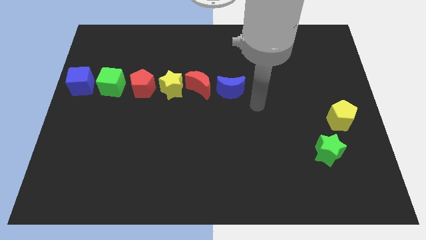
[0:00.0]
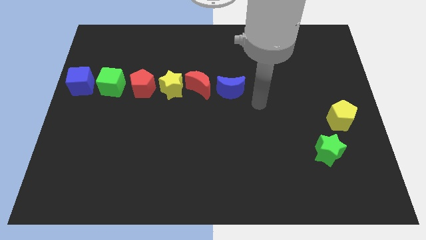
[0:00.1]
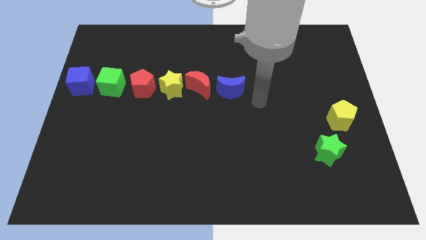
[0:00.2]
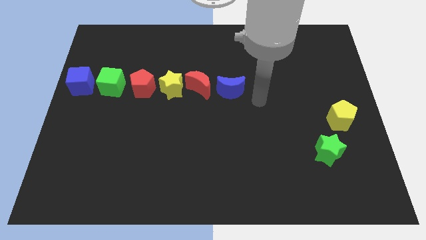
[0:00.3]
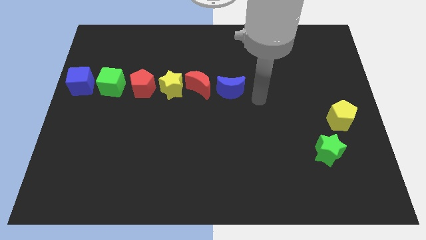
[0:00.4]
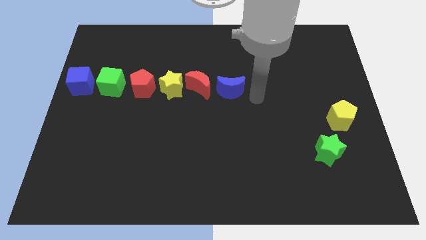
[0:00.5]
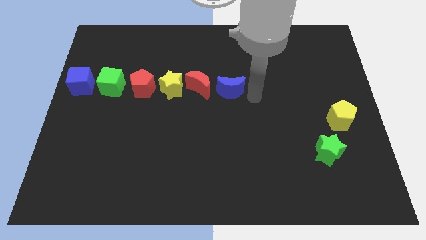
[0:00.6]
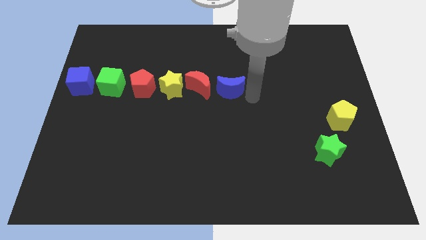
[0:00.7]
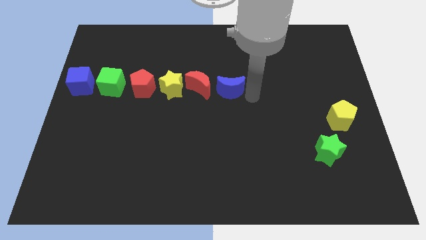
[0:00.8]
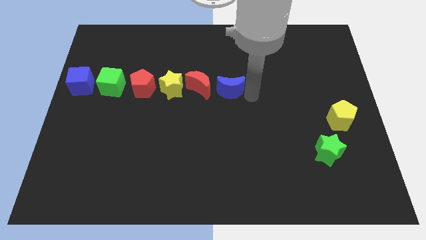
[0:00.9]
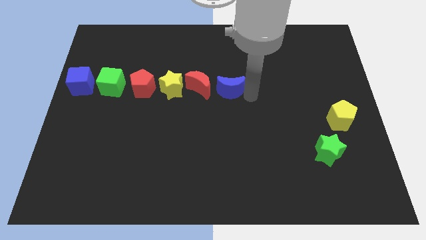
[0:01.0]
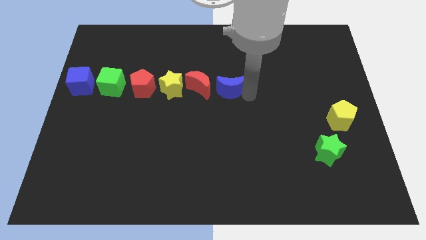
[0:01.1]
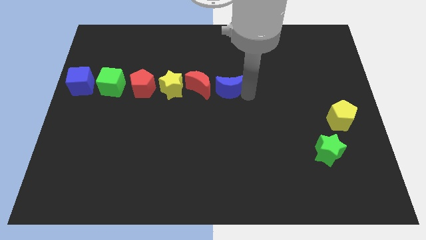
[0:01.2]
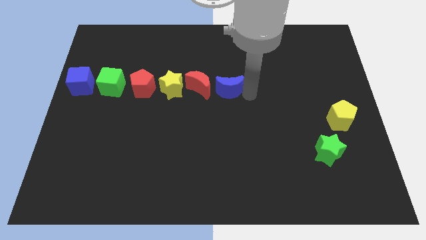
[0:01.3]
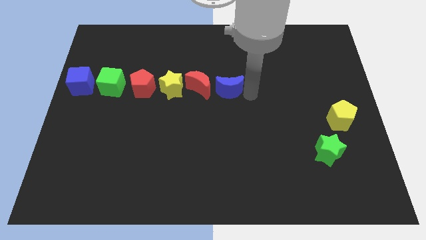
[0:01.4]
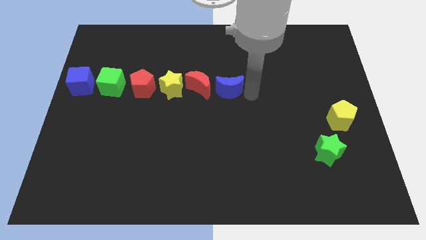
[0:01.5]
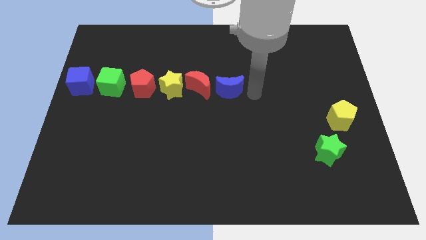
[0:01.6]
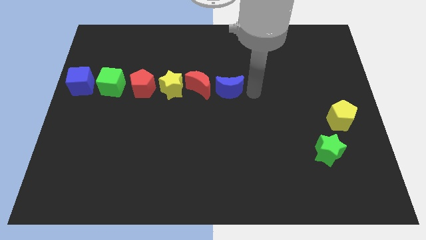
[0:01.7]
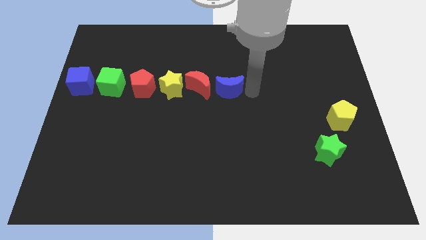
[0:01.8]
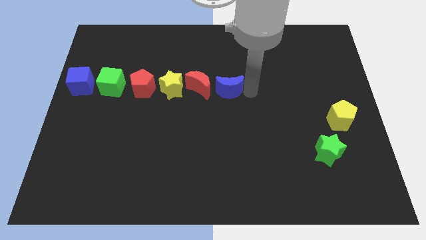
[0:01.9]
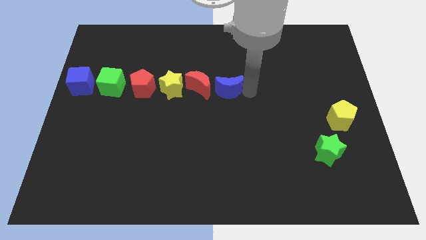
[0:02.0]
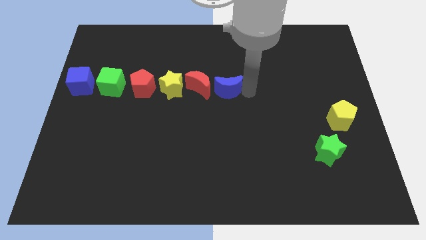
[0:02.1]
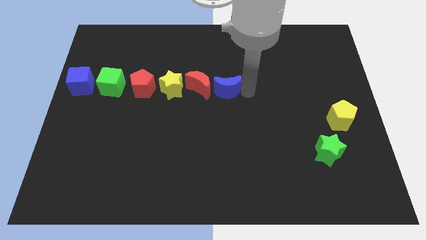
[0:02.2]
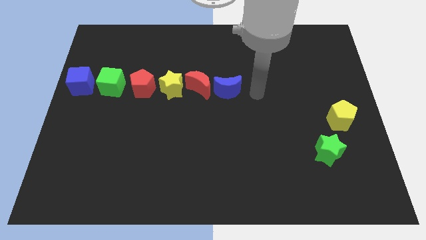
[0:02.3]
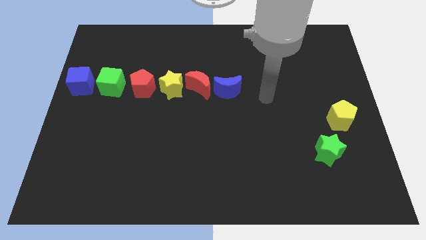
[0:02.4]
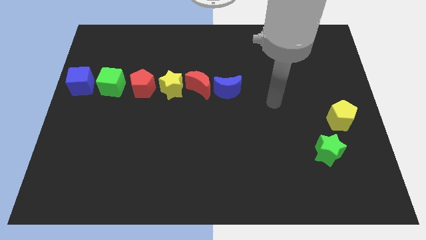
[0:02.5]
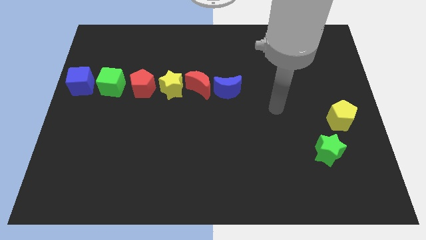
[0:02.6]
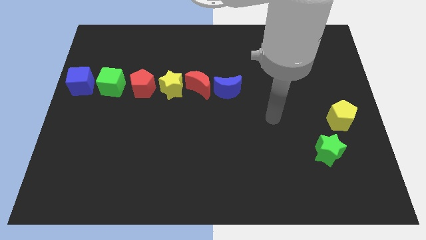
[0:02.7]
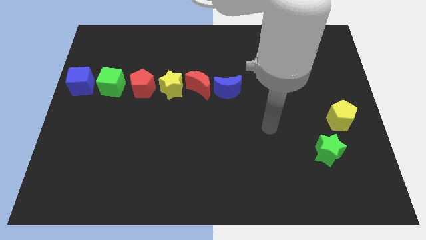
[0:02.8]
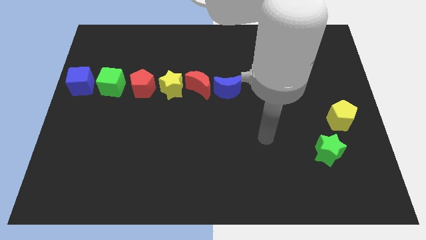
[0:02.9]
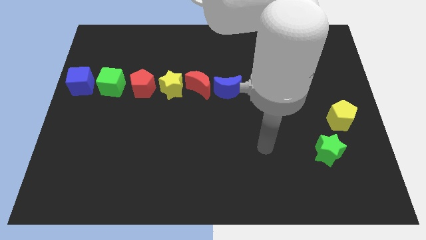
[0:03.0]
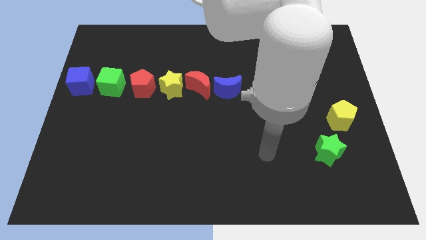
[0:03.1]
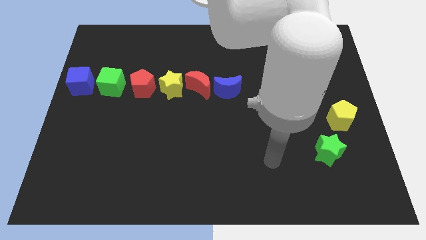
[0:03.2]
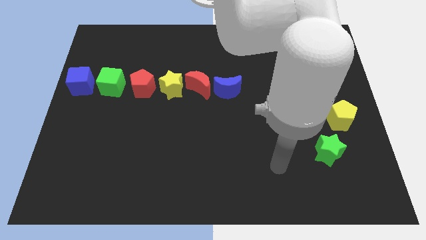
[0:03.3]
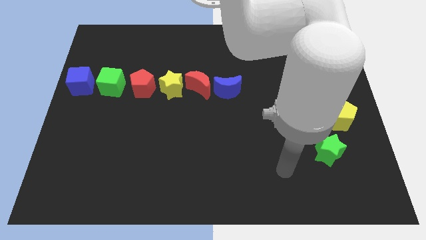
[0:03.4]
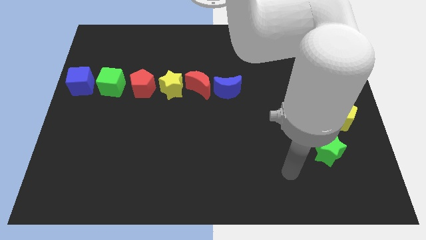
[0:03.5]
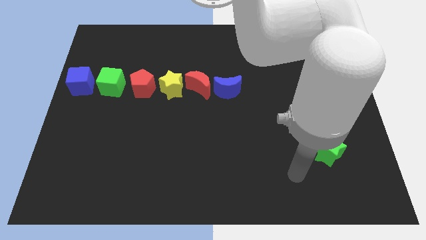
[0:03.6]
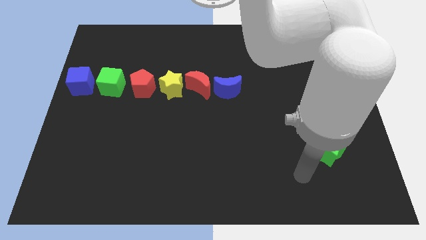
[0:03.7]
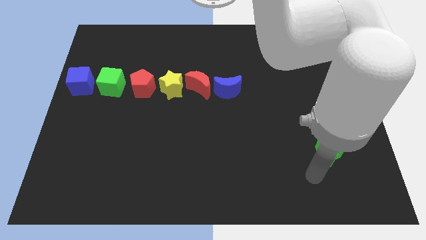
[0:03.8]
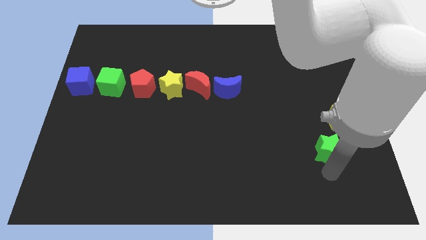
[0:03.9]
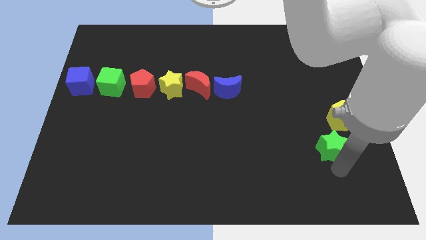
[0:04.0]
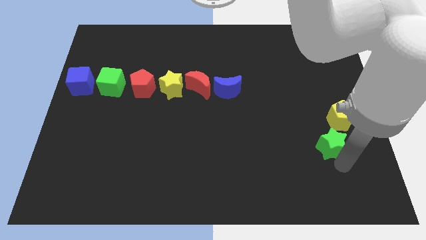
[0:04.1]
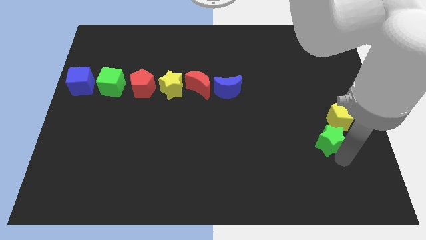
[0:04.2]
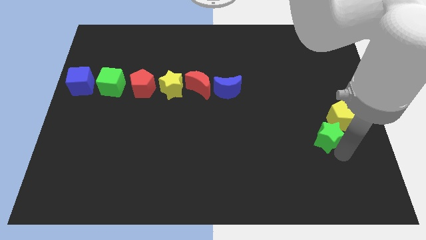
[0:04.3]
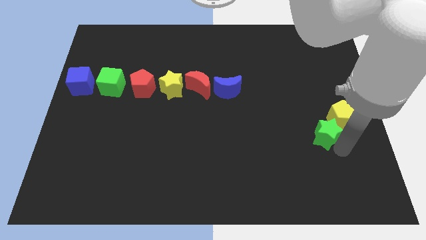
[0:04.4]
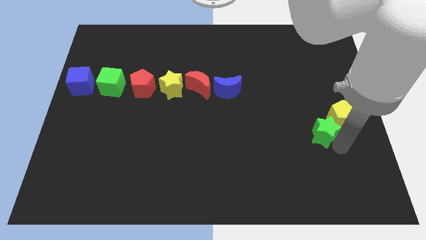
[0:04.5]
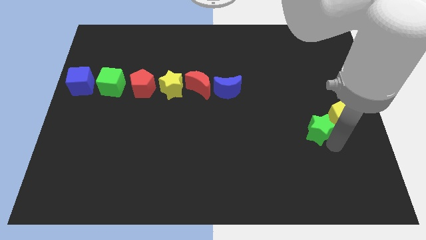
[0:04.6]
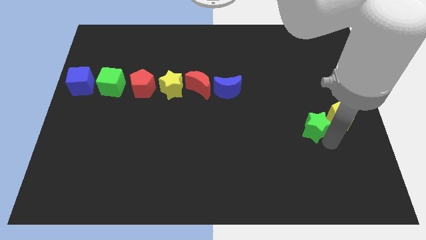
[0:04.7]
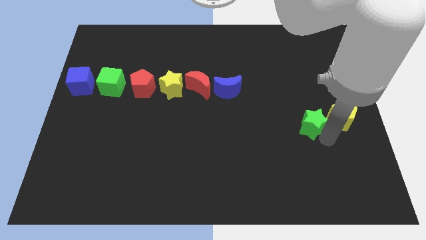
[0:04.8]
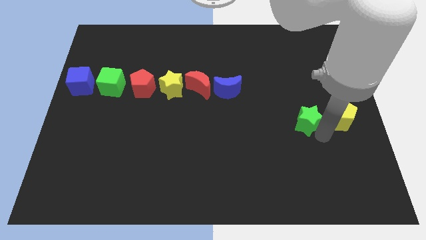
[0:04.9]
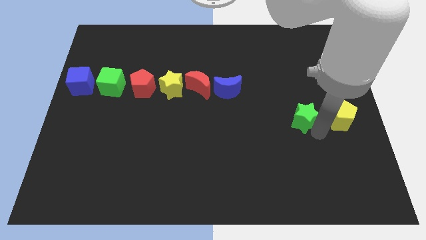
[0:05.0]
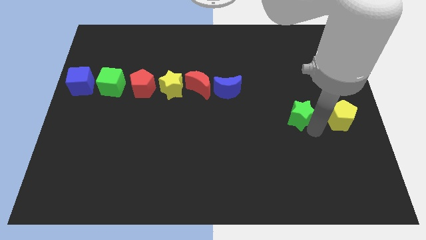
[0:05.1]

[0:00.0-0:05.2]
place the green star to the left of the yellow pentagon

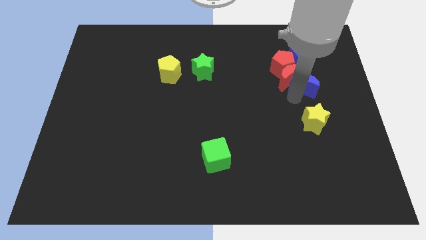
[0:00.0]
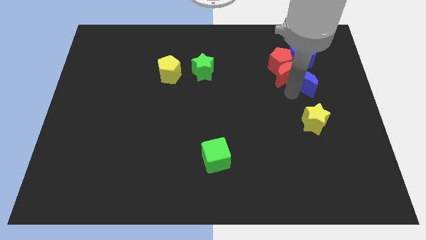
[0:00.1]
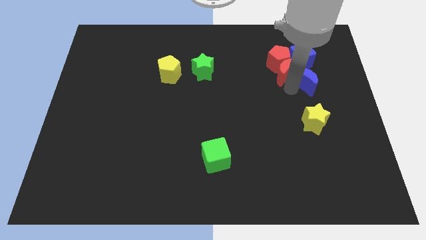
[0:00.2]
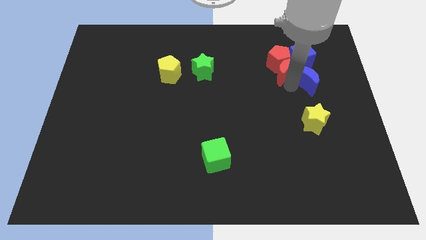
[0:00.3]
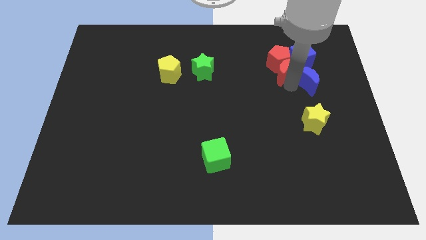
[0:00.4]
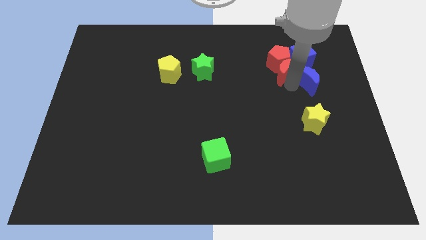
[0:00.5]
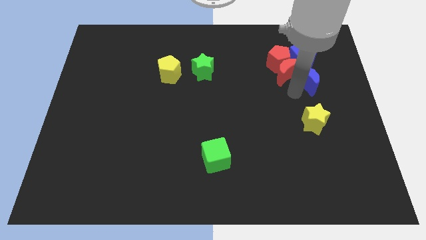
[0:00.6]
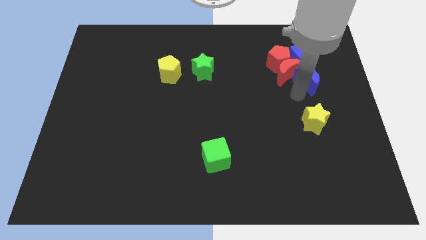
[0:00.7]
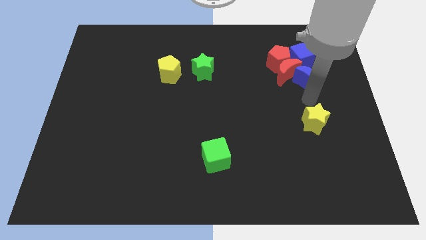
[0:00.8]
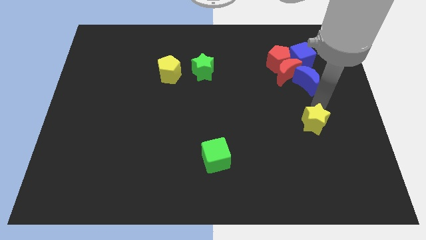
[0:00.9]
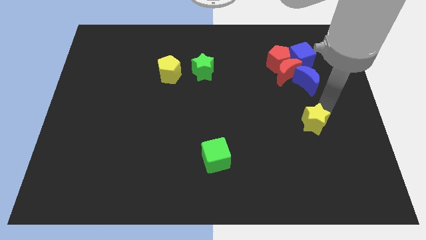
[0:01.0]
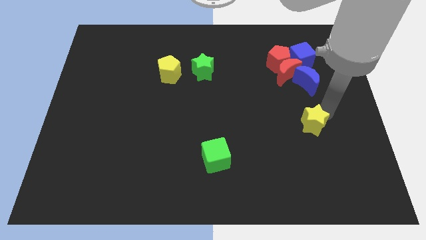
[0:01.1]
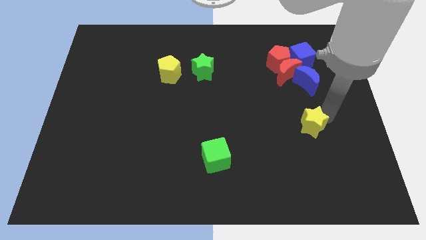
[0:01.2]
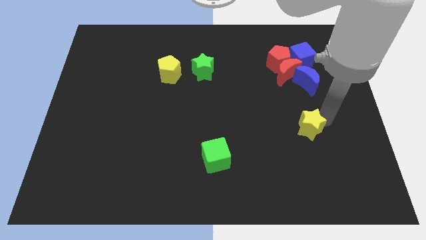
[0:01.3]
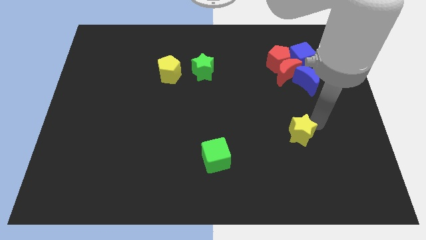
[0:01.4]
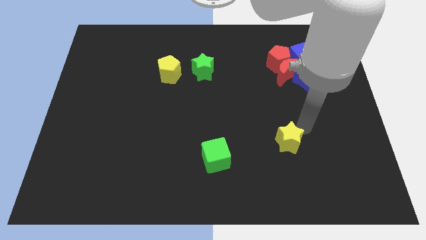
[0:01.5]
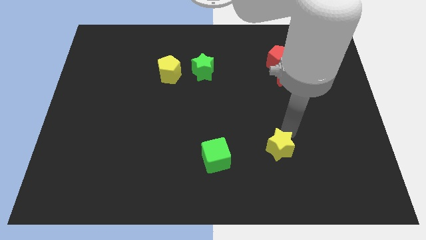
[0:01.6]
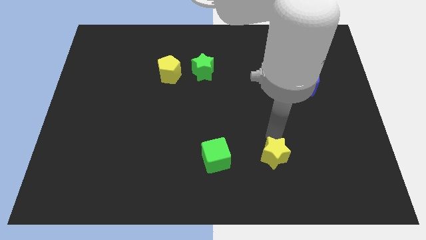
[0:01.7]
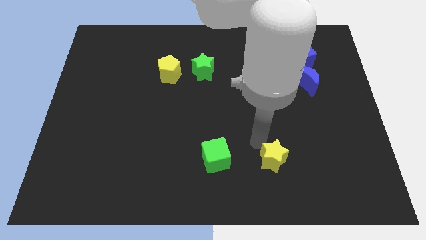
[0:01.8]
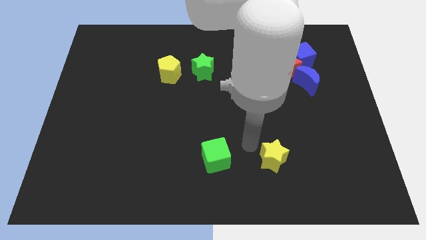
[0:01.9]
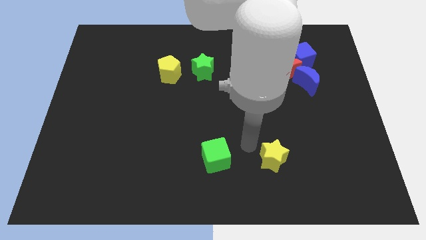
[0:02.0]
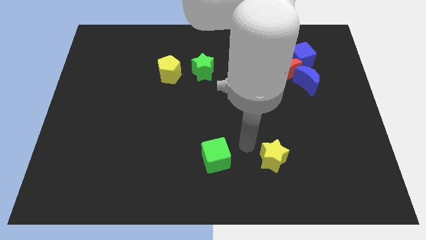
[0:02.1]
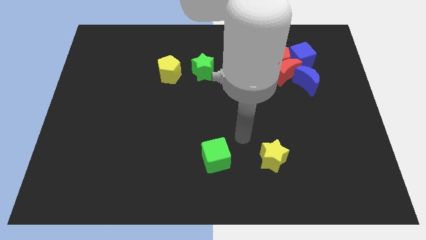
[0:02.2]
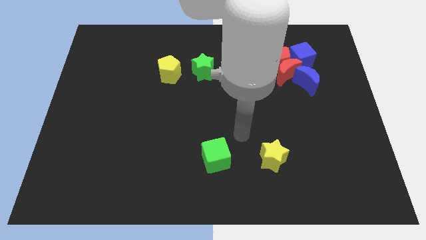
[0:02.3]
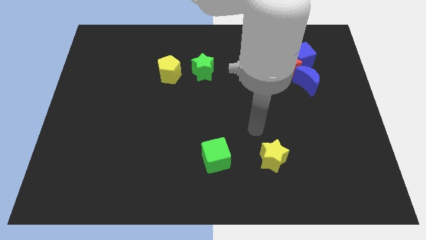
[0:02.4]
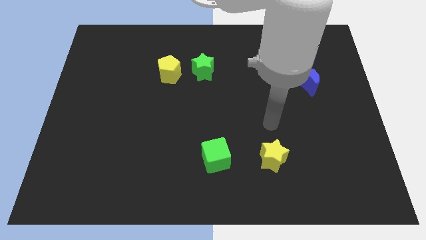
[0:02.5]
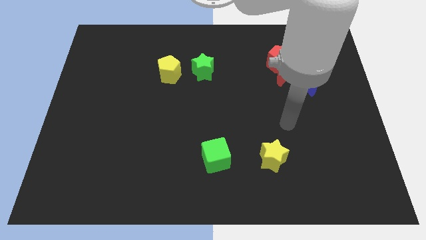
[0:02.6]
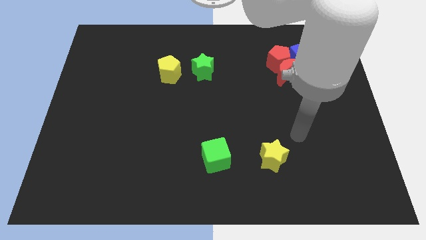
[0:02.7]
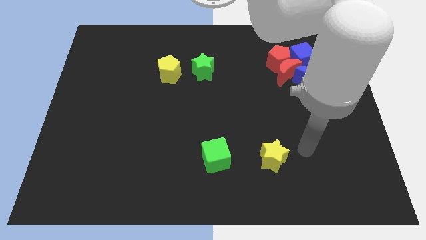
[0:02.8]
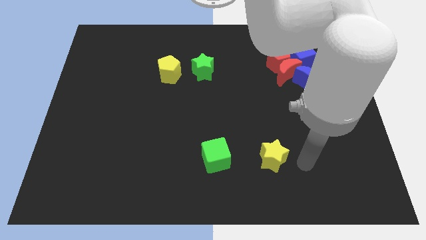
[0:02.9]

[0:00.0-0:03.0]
place yellow star beside green cube

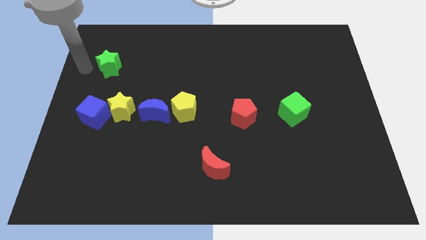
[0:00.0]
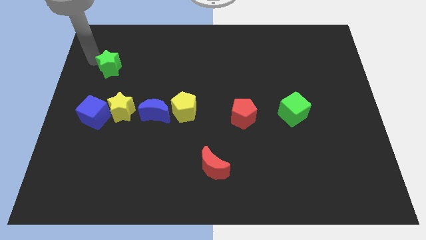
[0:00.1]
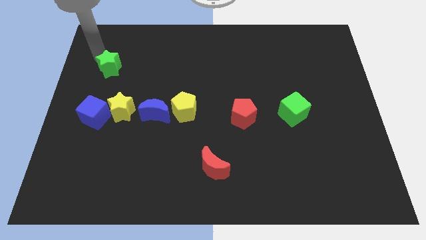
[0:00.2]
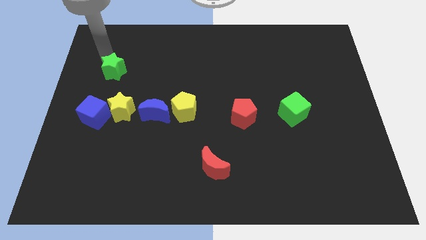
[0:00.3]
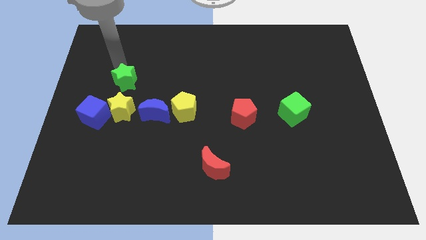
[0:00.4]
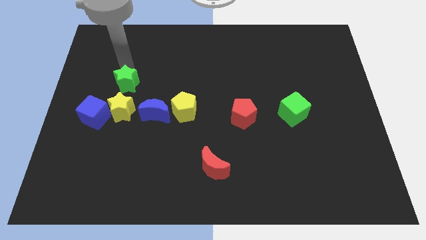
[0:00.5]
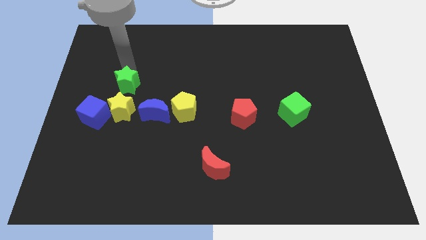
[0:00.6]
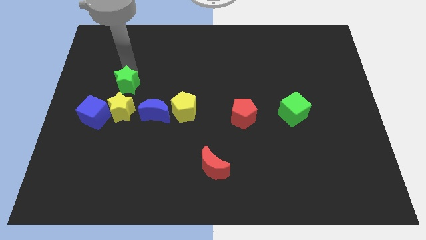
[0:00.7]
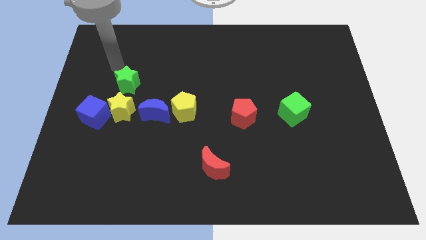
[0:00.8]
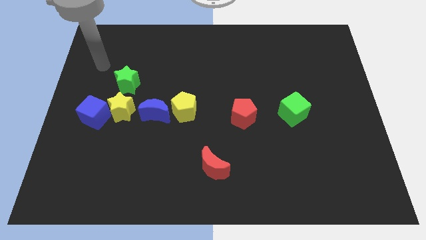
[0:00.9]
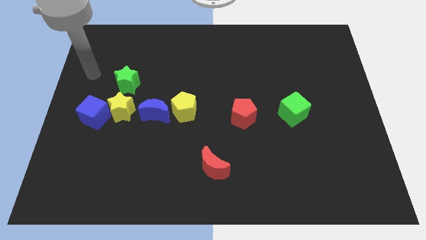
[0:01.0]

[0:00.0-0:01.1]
place the green star above the yellow star
